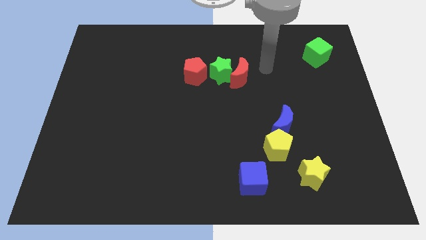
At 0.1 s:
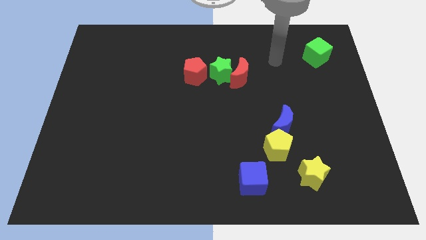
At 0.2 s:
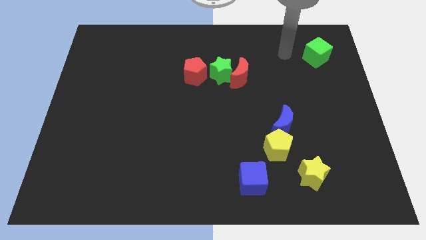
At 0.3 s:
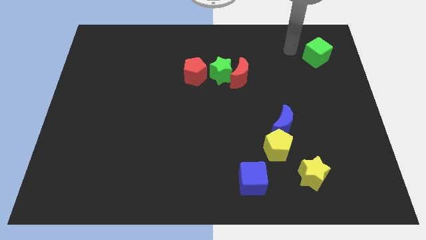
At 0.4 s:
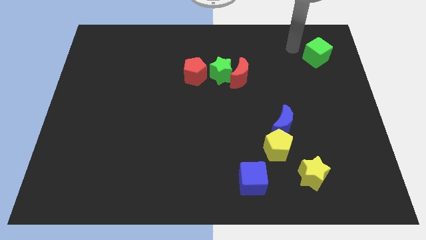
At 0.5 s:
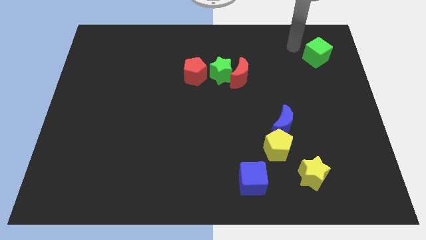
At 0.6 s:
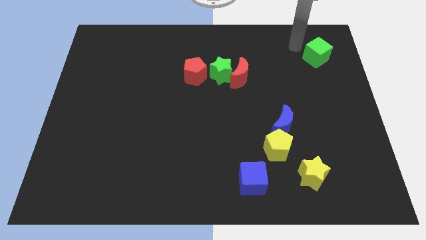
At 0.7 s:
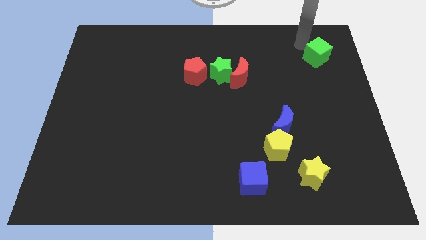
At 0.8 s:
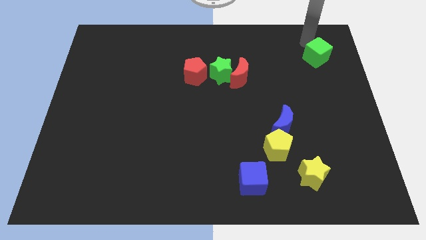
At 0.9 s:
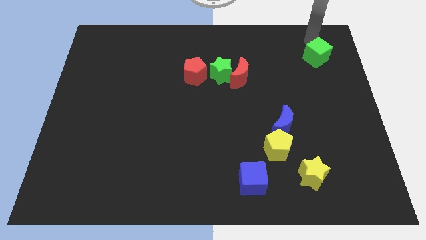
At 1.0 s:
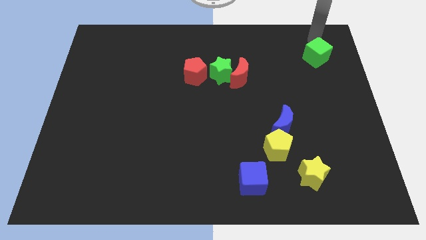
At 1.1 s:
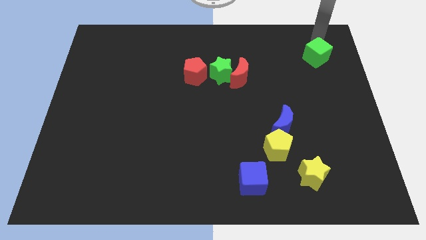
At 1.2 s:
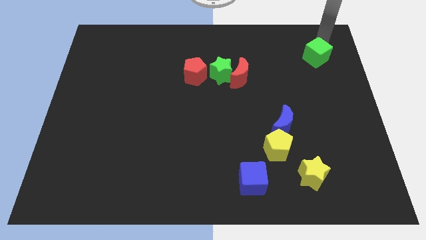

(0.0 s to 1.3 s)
move the arm to the top of the green cube

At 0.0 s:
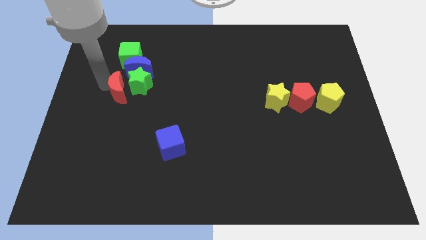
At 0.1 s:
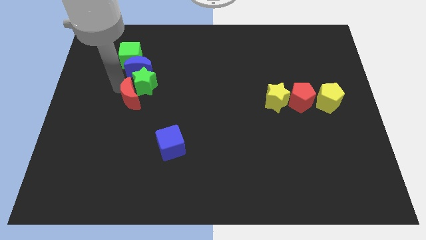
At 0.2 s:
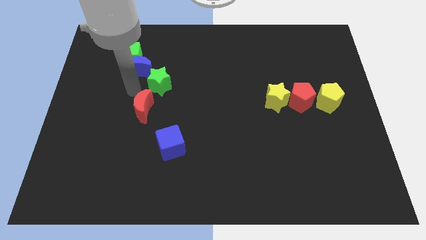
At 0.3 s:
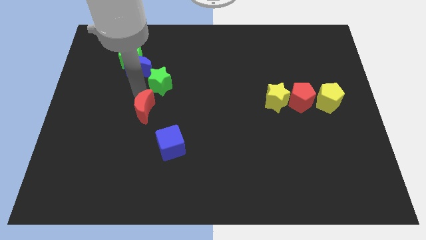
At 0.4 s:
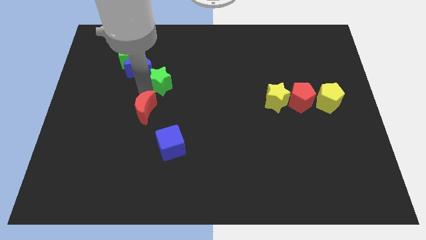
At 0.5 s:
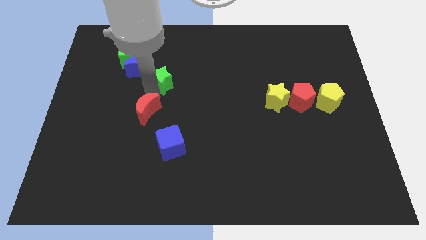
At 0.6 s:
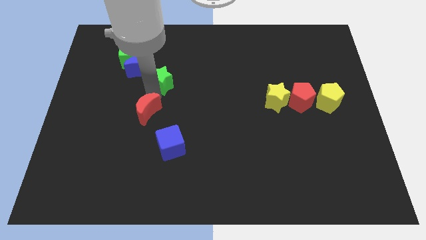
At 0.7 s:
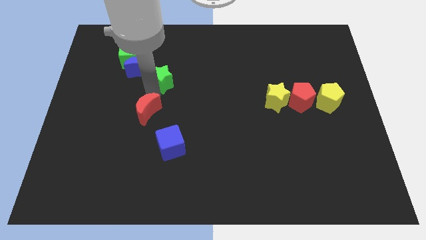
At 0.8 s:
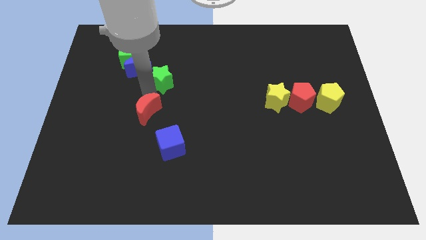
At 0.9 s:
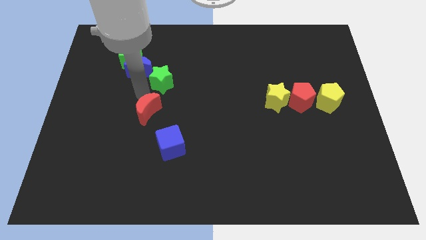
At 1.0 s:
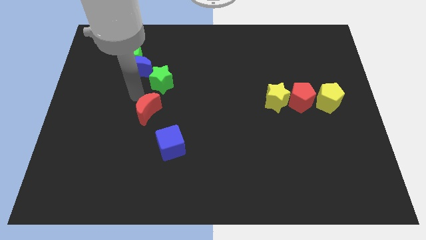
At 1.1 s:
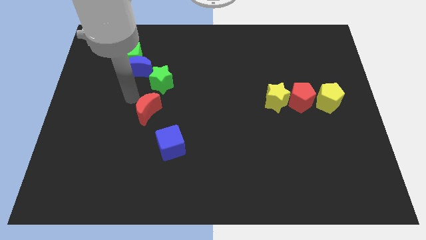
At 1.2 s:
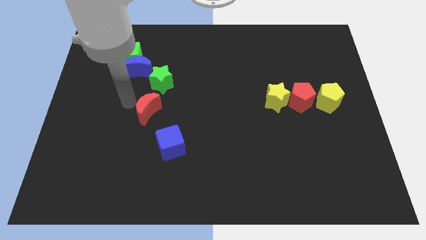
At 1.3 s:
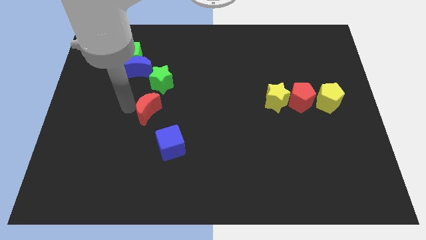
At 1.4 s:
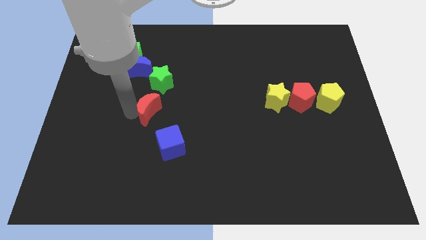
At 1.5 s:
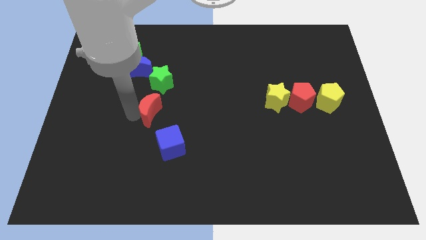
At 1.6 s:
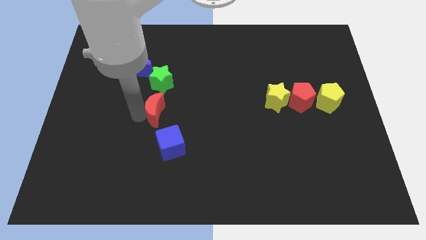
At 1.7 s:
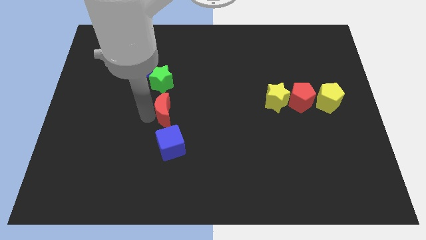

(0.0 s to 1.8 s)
place the red moon in between the green star and blue cube

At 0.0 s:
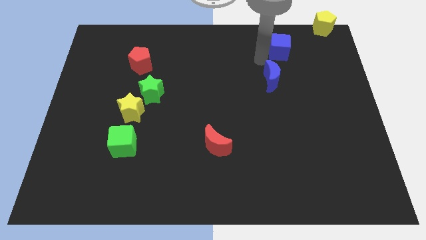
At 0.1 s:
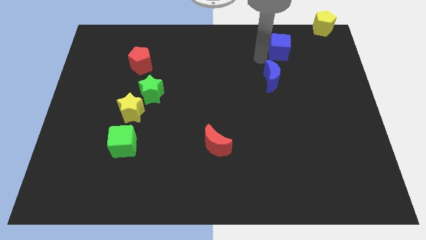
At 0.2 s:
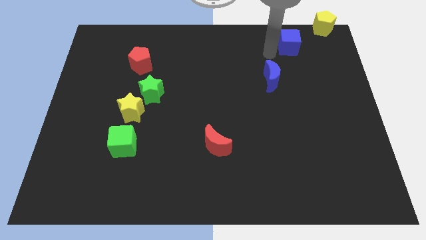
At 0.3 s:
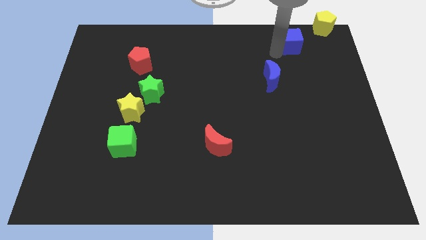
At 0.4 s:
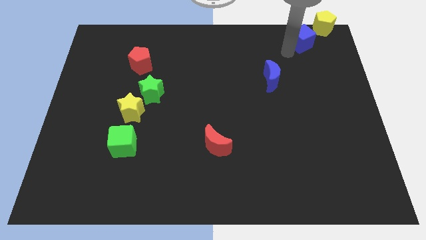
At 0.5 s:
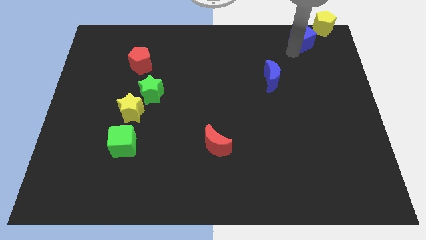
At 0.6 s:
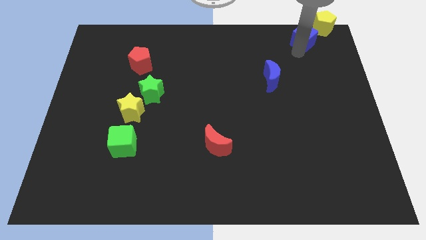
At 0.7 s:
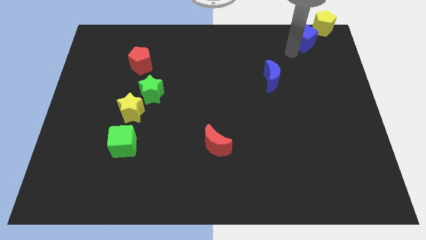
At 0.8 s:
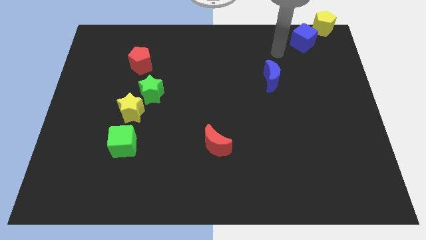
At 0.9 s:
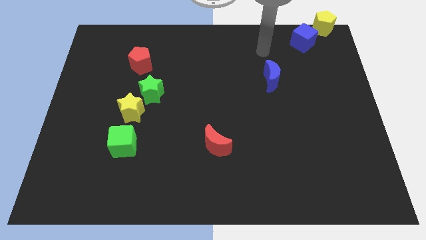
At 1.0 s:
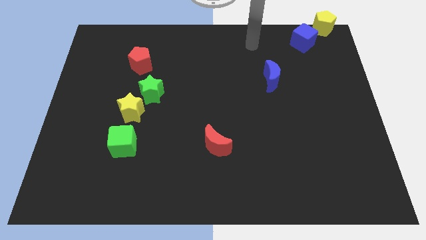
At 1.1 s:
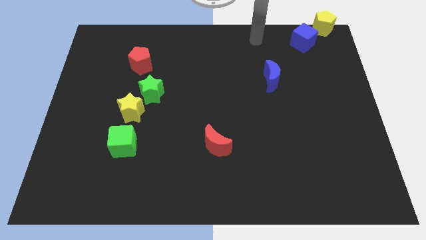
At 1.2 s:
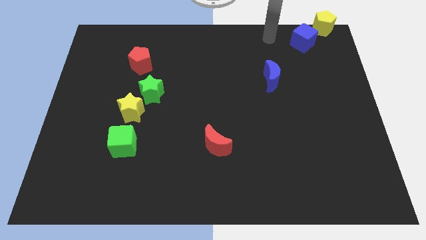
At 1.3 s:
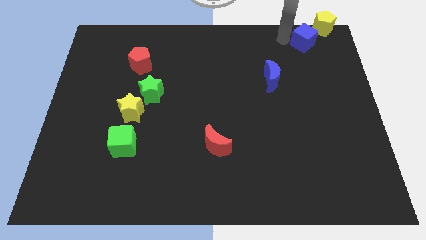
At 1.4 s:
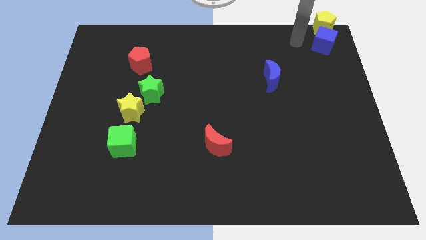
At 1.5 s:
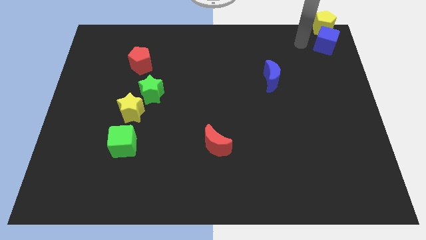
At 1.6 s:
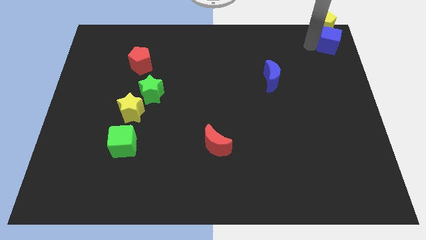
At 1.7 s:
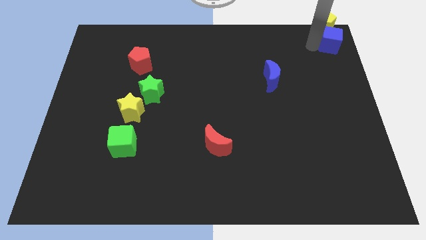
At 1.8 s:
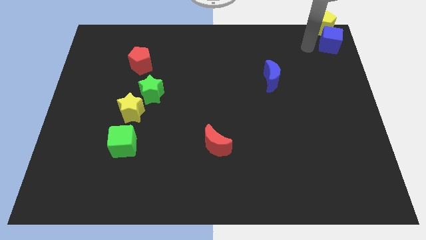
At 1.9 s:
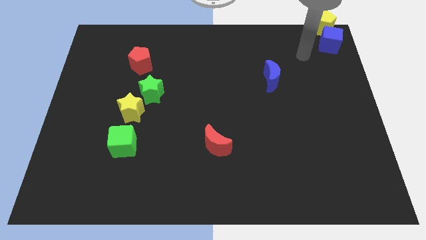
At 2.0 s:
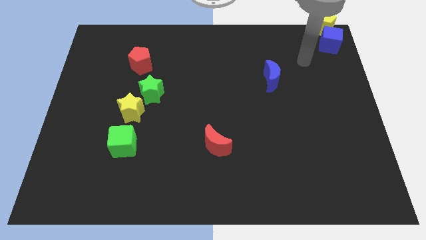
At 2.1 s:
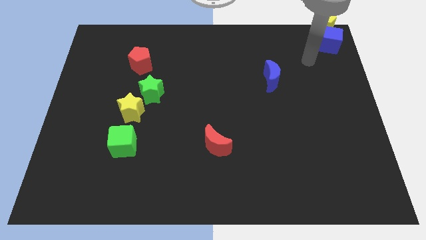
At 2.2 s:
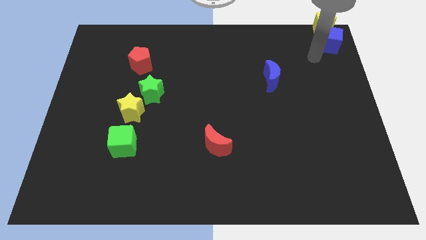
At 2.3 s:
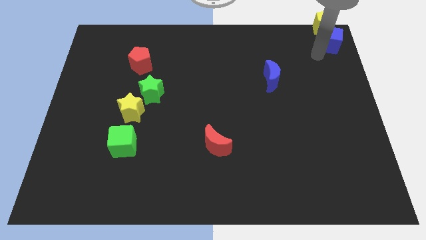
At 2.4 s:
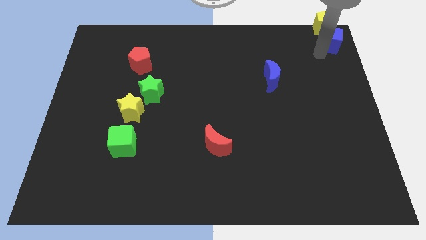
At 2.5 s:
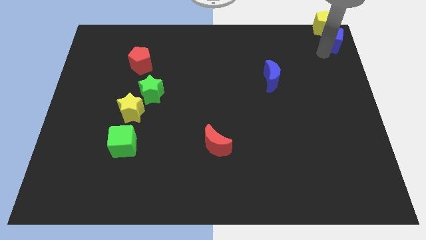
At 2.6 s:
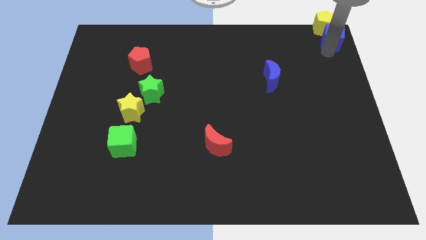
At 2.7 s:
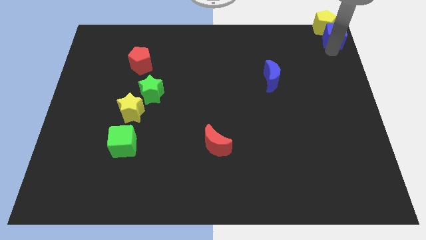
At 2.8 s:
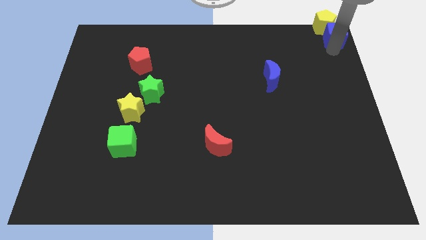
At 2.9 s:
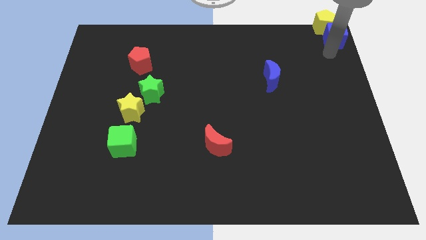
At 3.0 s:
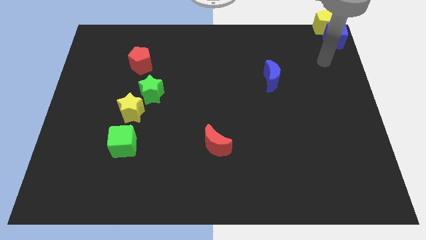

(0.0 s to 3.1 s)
push the blue cube into the yellow pentagon

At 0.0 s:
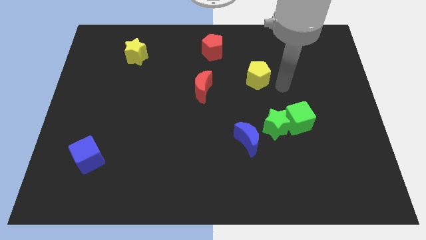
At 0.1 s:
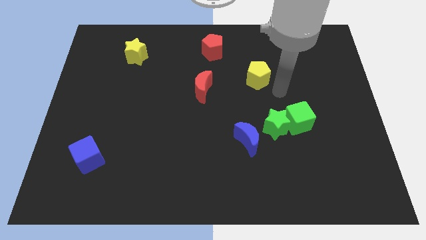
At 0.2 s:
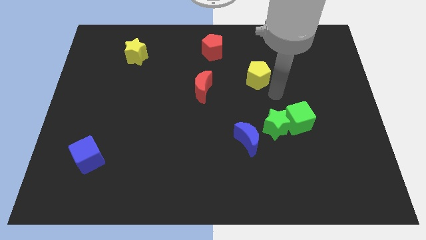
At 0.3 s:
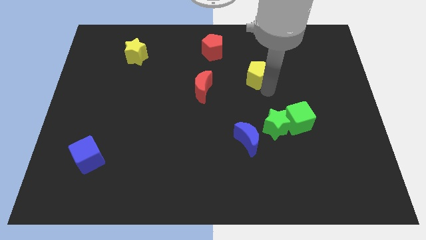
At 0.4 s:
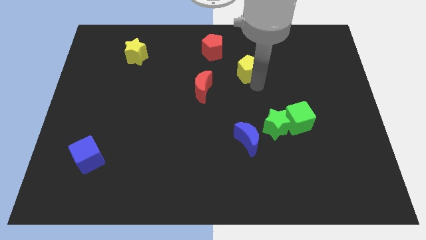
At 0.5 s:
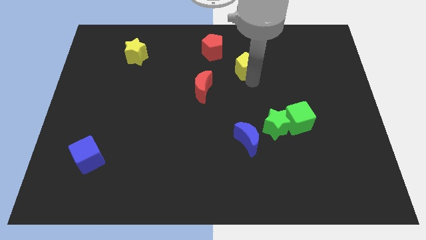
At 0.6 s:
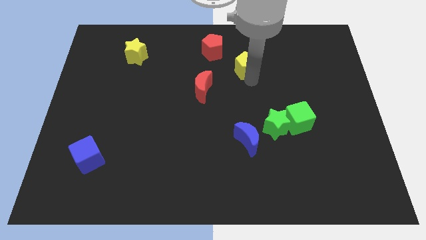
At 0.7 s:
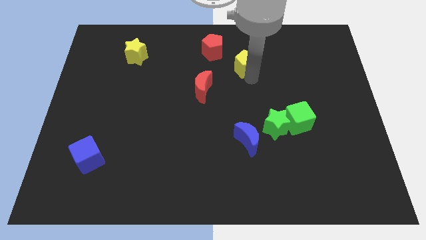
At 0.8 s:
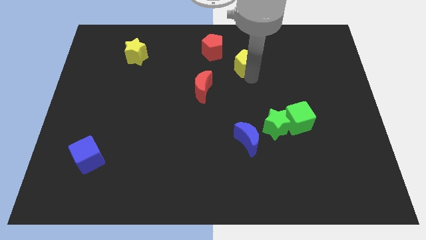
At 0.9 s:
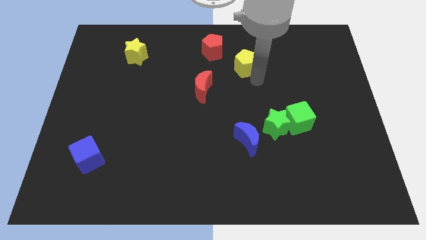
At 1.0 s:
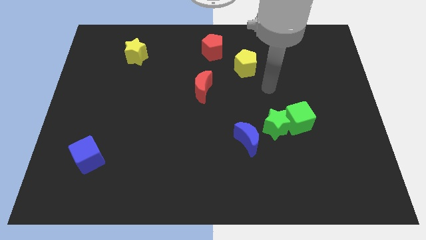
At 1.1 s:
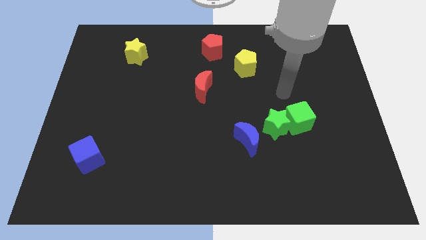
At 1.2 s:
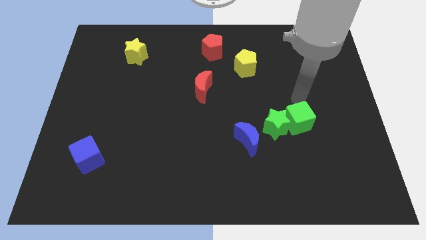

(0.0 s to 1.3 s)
place your arm above green cube

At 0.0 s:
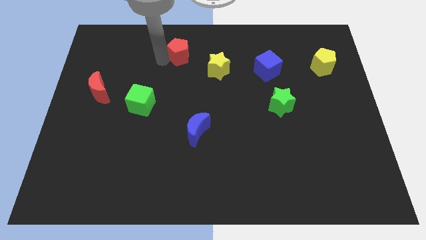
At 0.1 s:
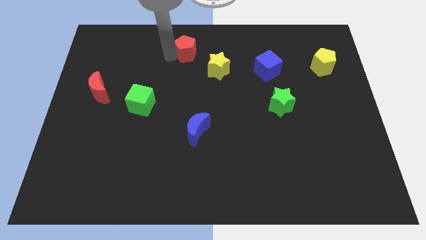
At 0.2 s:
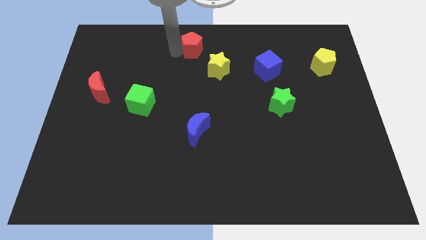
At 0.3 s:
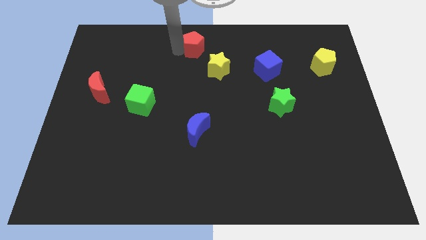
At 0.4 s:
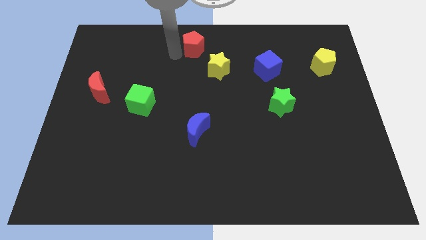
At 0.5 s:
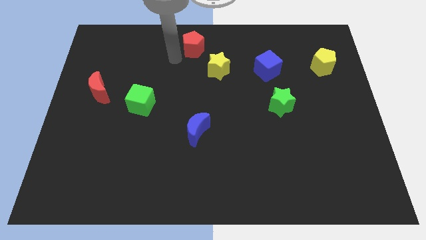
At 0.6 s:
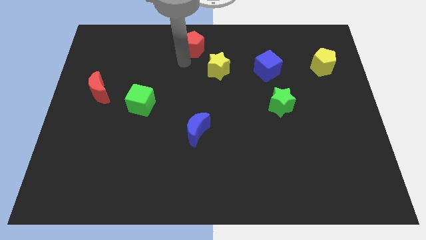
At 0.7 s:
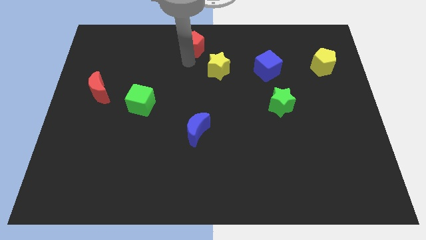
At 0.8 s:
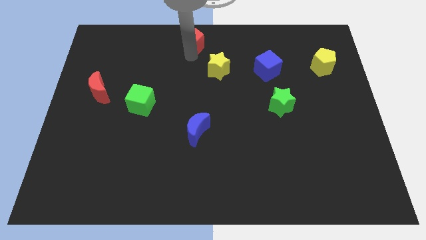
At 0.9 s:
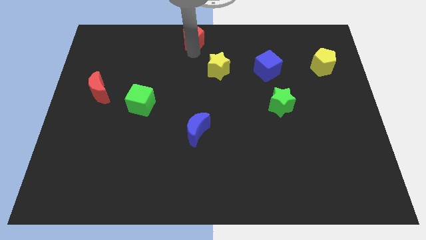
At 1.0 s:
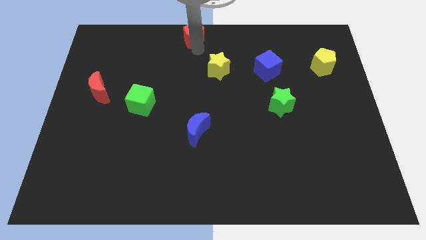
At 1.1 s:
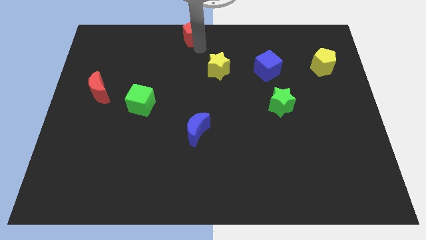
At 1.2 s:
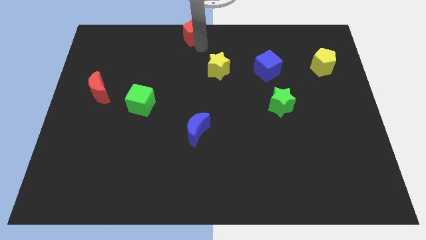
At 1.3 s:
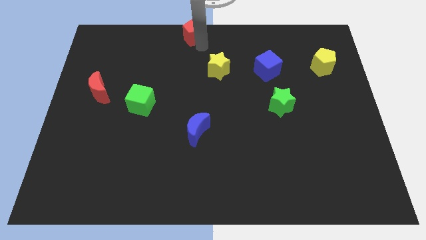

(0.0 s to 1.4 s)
place the red pentagon to the top left of yellow star
